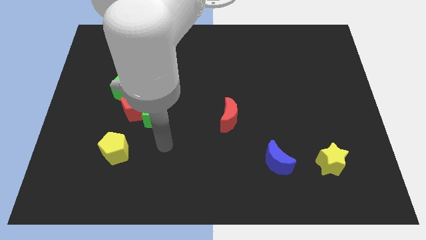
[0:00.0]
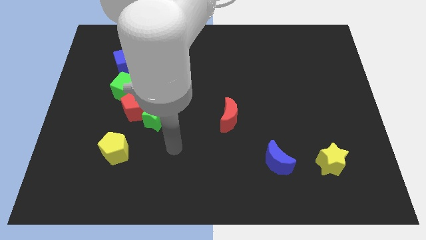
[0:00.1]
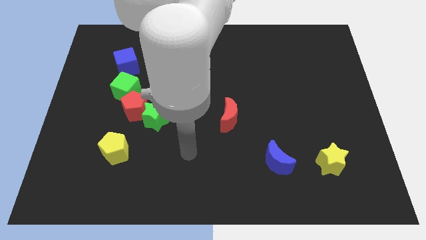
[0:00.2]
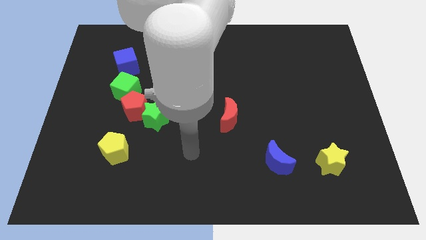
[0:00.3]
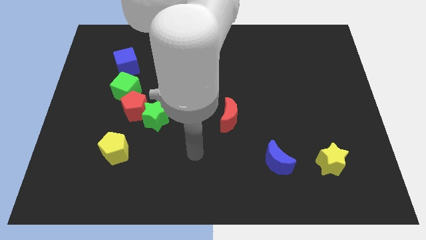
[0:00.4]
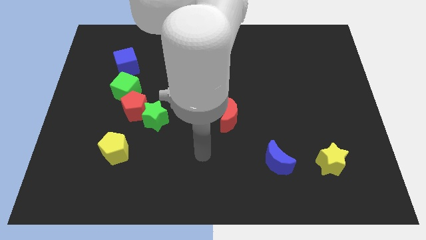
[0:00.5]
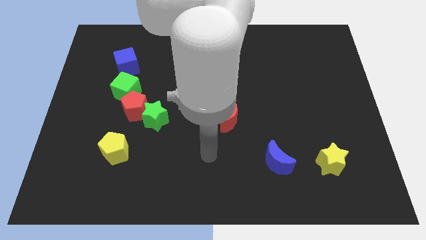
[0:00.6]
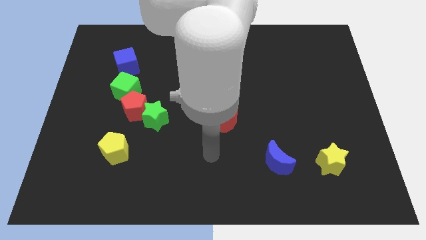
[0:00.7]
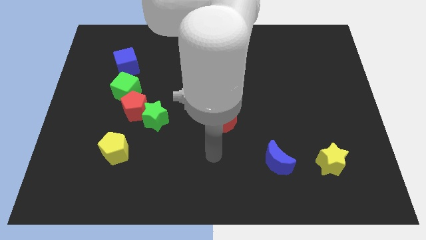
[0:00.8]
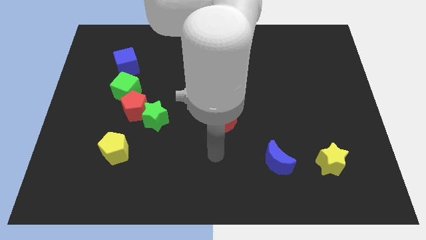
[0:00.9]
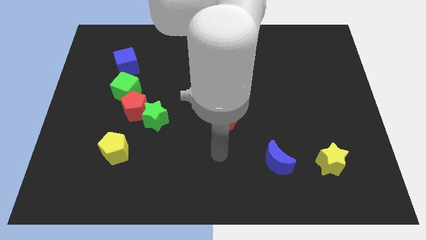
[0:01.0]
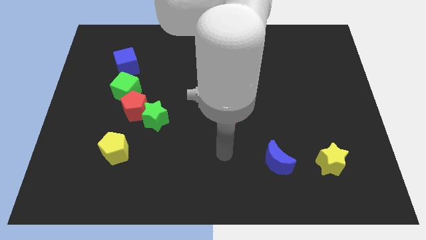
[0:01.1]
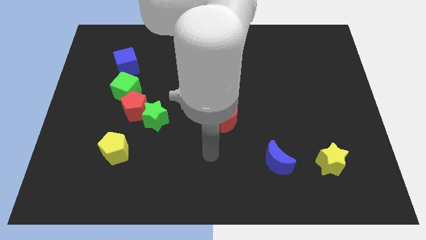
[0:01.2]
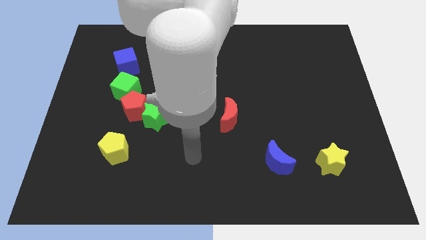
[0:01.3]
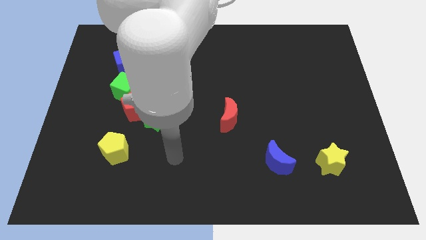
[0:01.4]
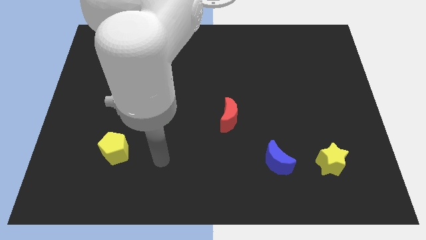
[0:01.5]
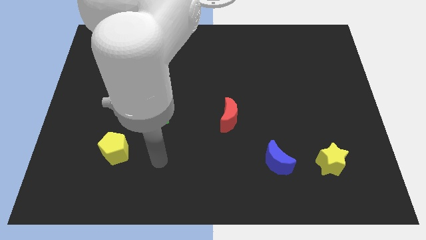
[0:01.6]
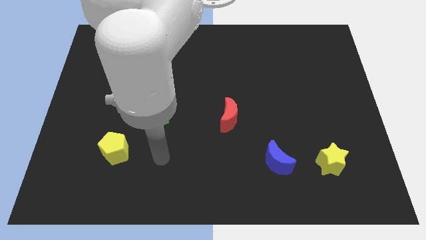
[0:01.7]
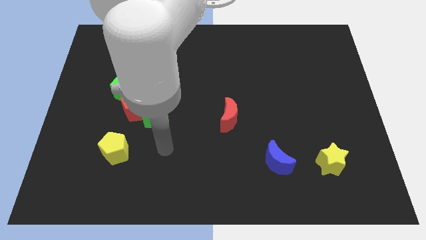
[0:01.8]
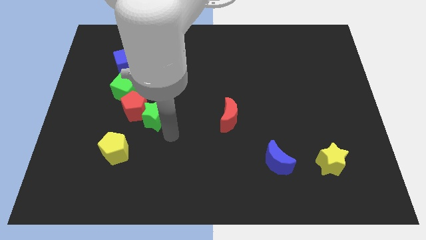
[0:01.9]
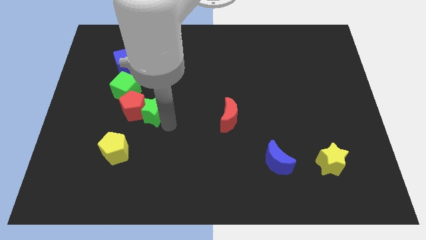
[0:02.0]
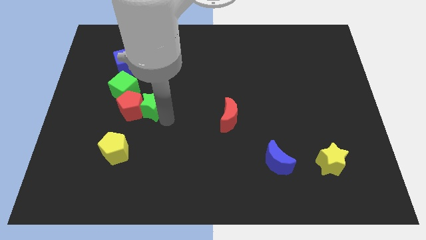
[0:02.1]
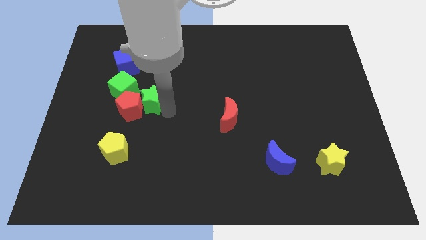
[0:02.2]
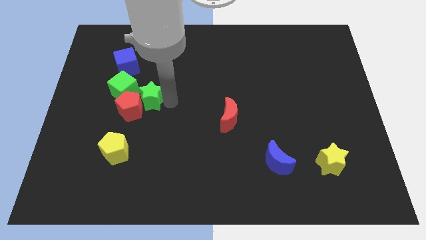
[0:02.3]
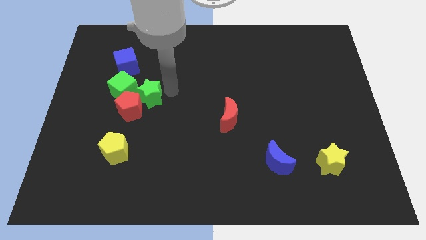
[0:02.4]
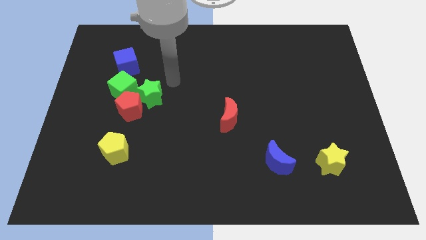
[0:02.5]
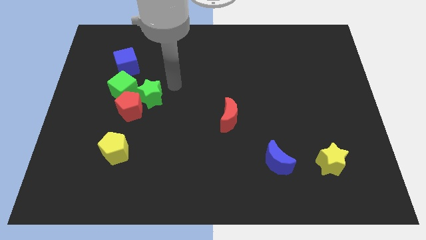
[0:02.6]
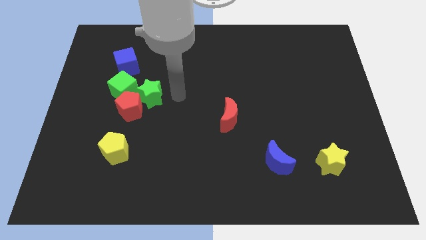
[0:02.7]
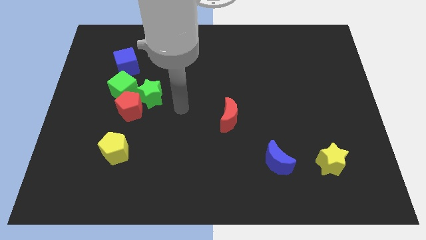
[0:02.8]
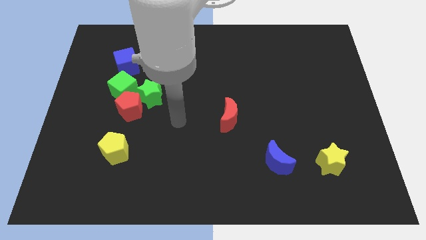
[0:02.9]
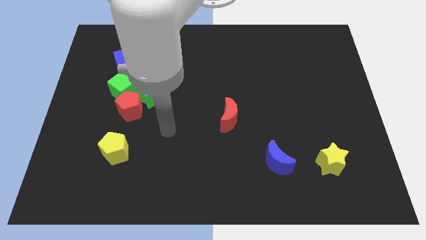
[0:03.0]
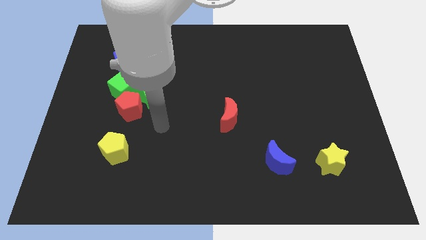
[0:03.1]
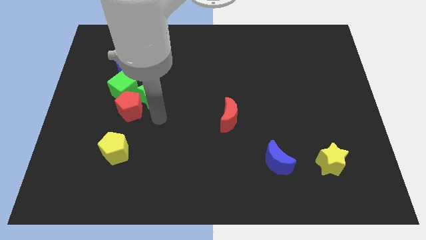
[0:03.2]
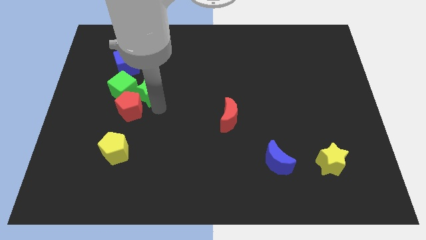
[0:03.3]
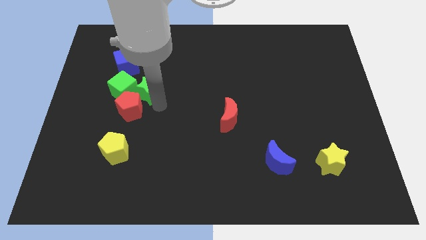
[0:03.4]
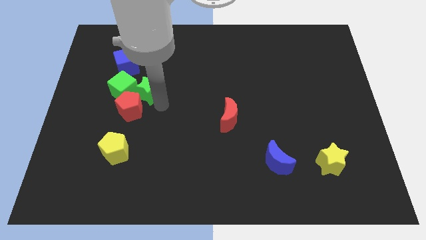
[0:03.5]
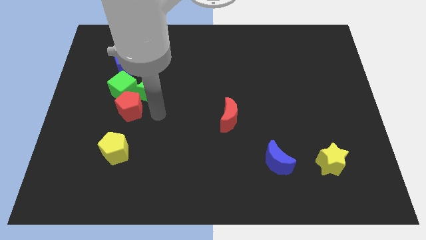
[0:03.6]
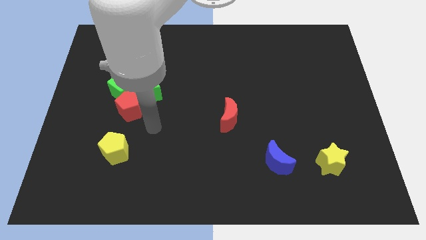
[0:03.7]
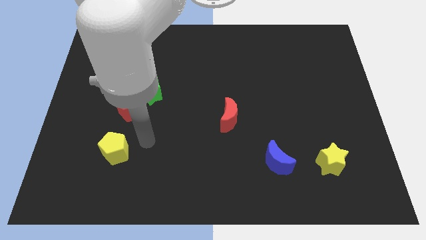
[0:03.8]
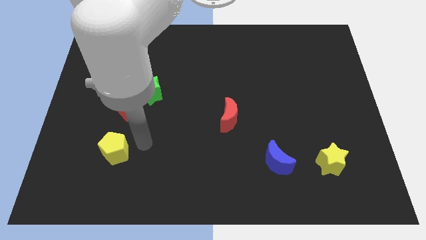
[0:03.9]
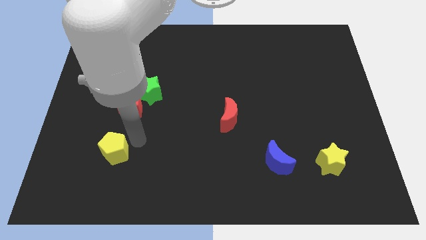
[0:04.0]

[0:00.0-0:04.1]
put green star on right side of green cube

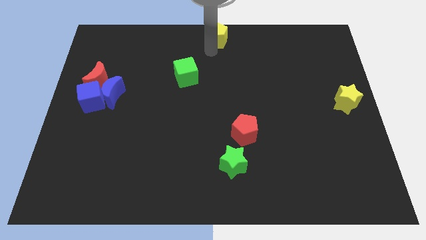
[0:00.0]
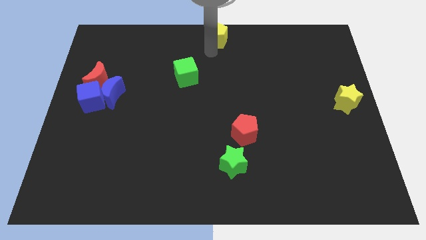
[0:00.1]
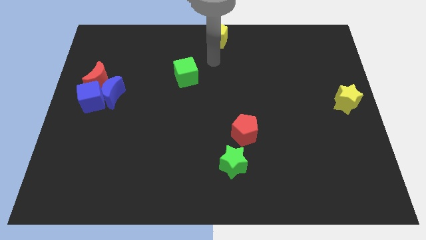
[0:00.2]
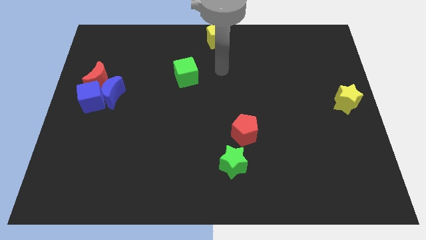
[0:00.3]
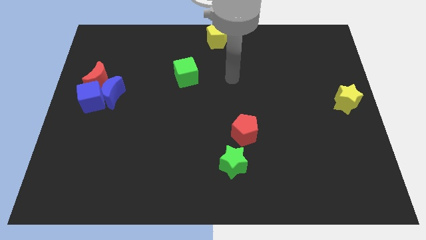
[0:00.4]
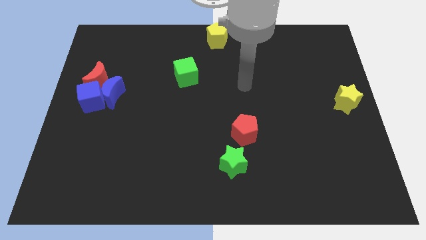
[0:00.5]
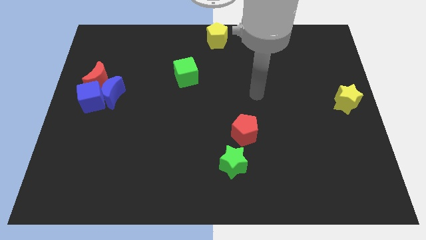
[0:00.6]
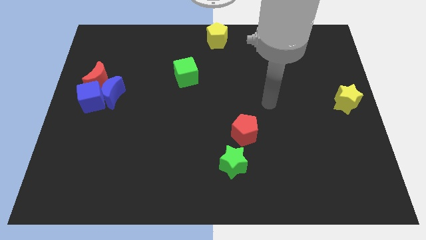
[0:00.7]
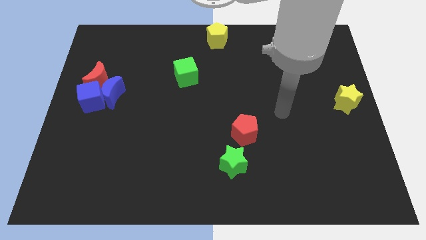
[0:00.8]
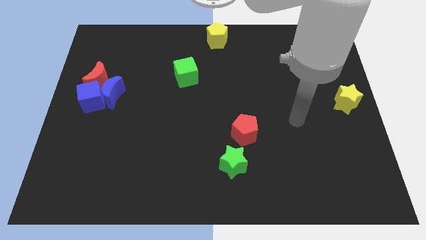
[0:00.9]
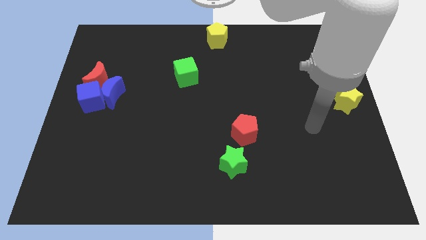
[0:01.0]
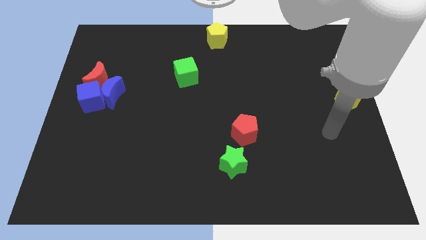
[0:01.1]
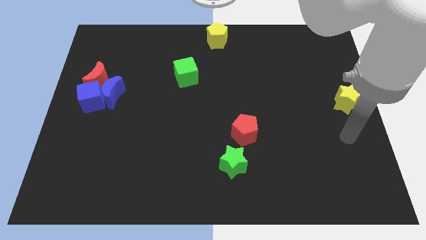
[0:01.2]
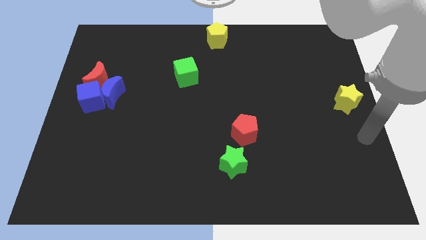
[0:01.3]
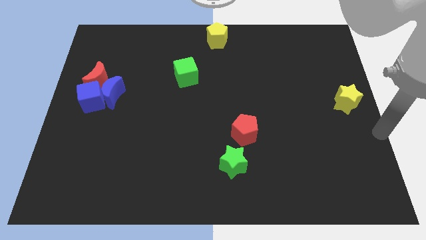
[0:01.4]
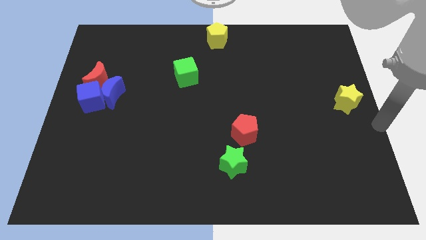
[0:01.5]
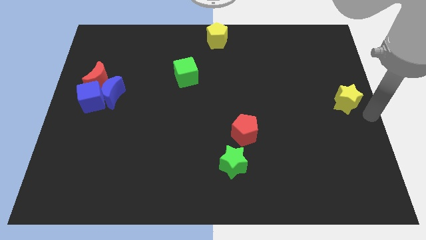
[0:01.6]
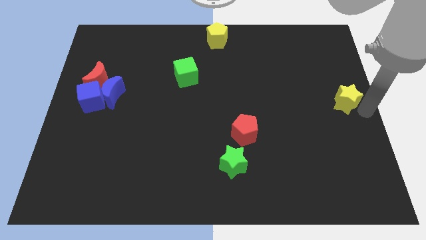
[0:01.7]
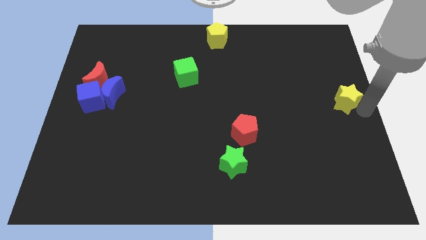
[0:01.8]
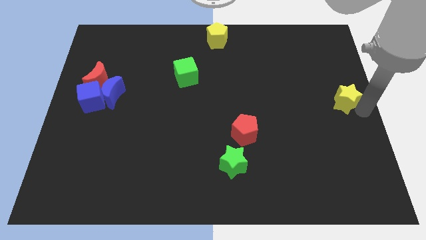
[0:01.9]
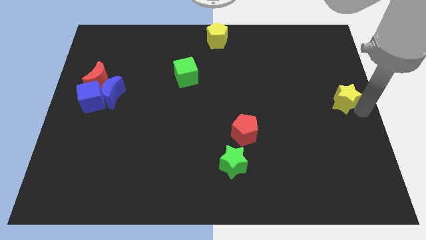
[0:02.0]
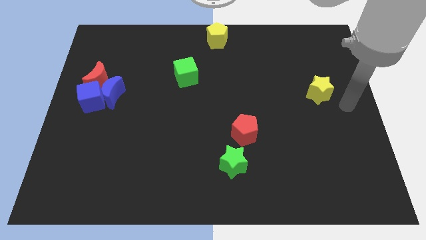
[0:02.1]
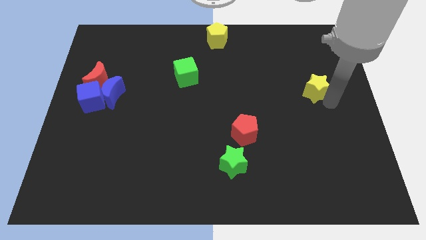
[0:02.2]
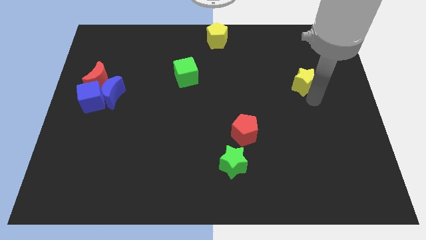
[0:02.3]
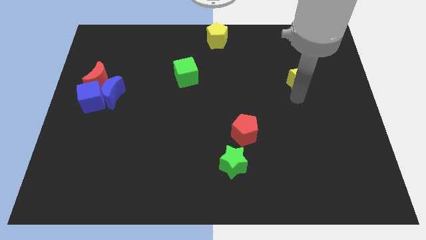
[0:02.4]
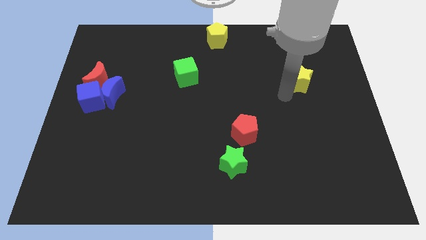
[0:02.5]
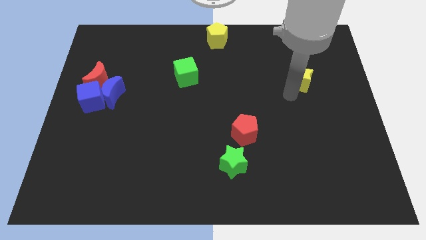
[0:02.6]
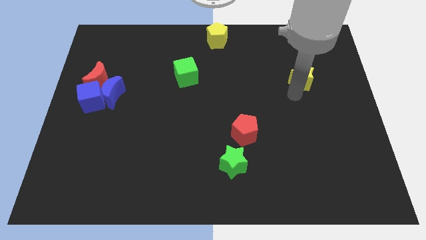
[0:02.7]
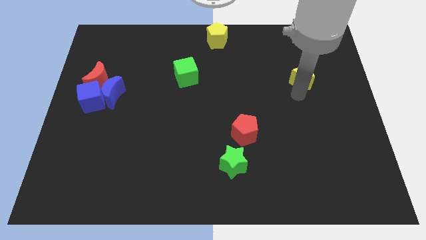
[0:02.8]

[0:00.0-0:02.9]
move the yellow star to the top right of the red pentagon

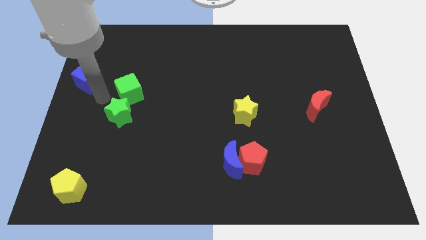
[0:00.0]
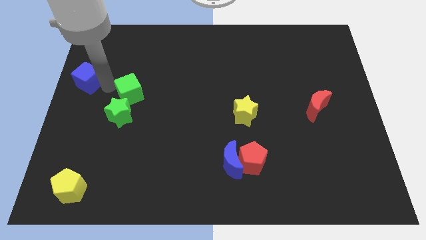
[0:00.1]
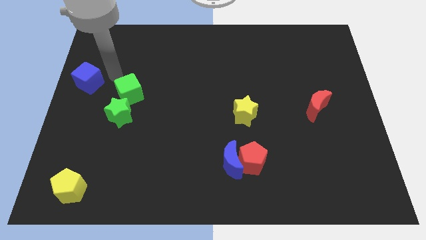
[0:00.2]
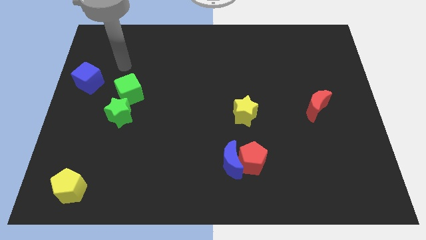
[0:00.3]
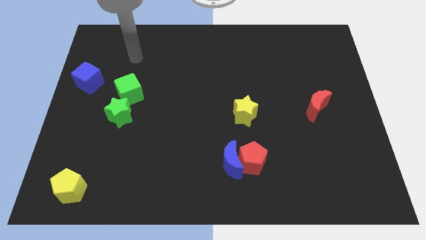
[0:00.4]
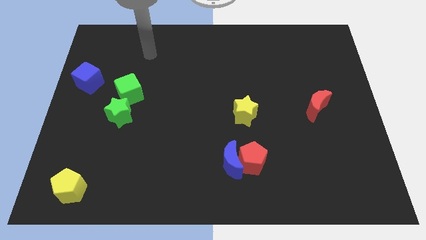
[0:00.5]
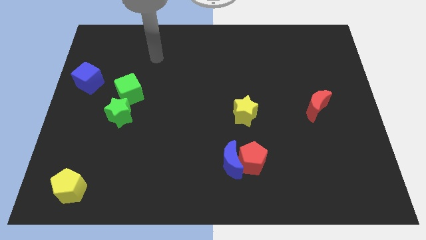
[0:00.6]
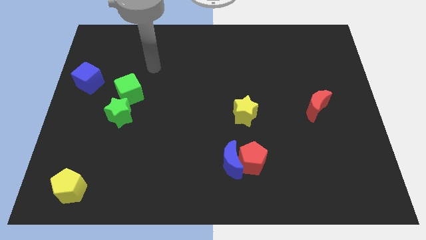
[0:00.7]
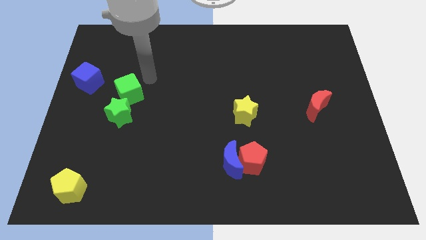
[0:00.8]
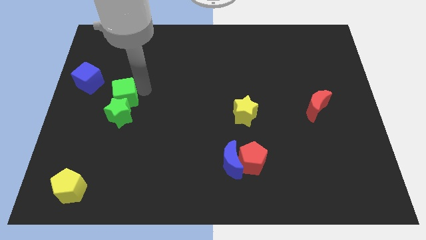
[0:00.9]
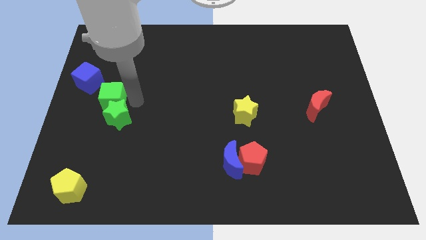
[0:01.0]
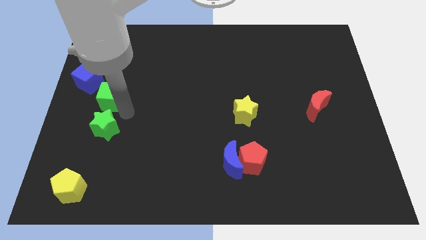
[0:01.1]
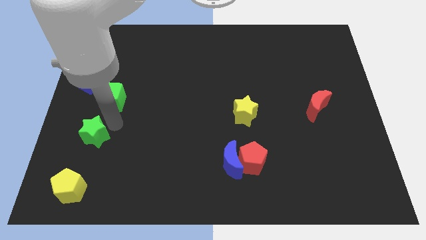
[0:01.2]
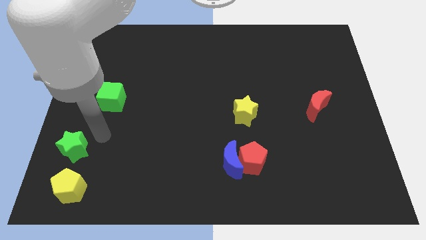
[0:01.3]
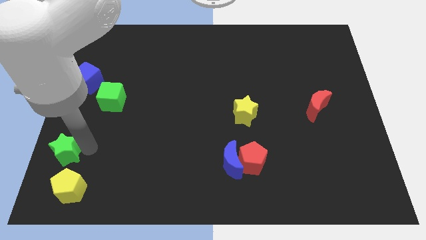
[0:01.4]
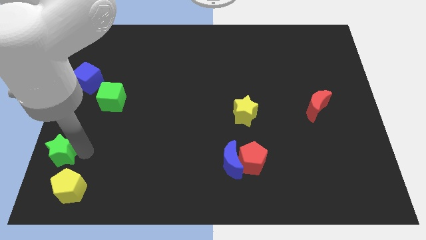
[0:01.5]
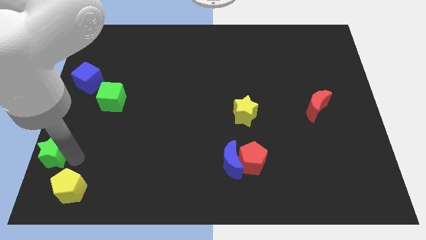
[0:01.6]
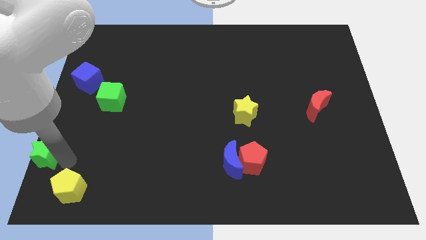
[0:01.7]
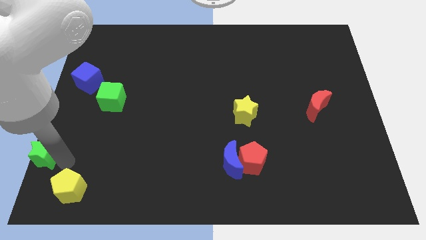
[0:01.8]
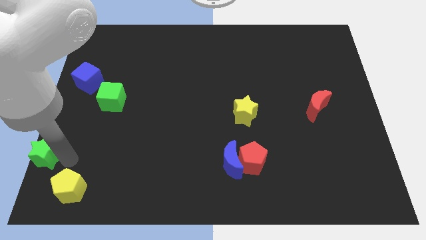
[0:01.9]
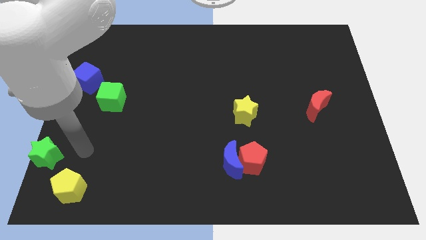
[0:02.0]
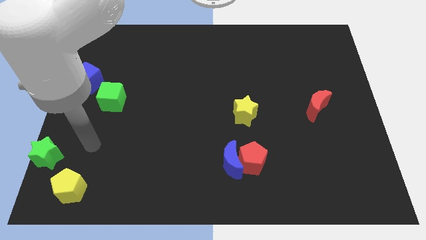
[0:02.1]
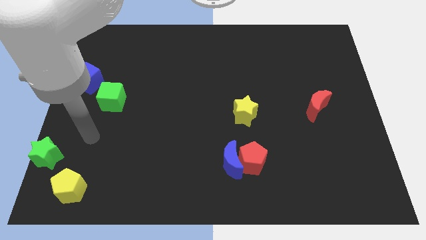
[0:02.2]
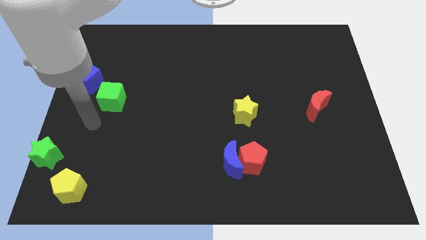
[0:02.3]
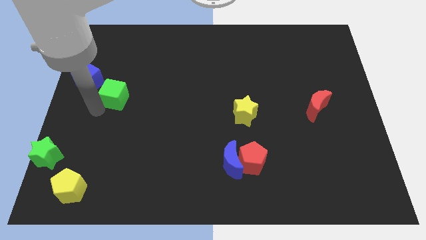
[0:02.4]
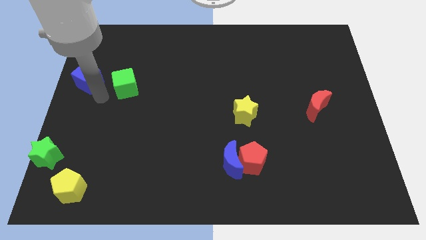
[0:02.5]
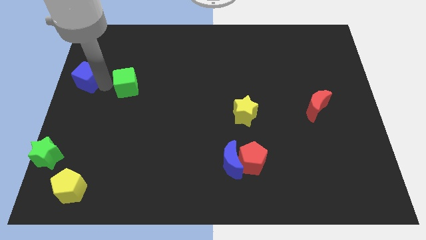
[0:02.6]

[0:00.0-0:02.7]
slide the green star to the bottom left
